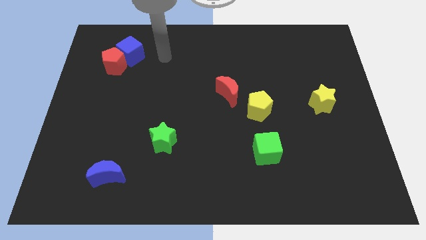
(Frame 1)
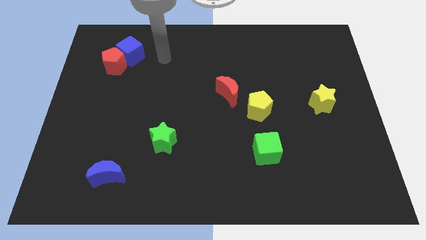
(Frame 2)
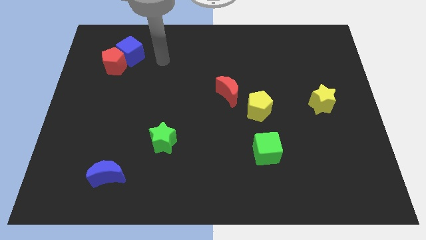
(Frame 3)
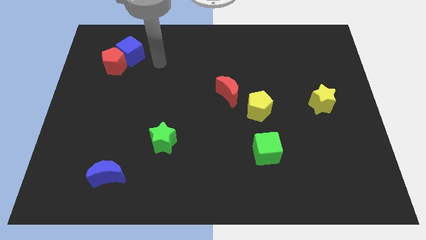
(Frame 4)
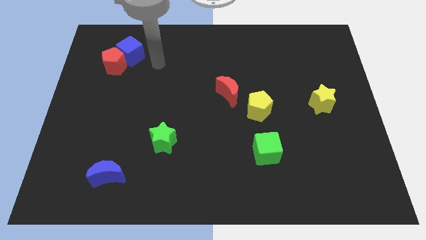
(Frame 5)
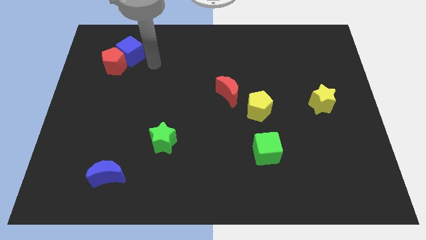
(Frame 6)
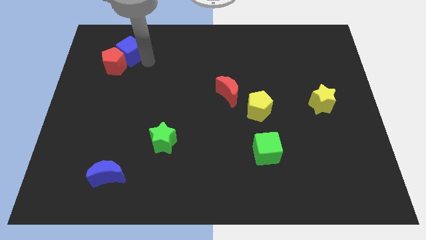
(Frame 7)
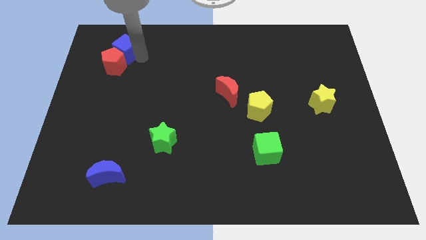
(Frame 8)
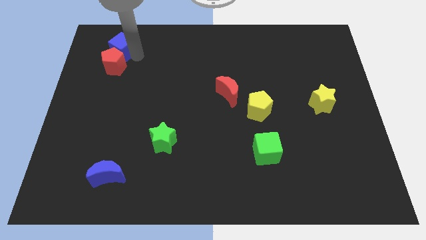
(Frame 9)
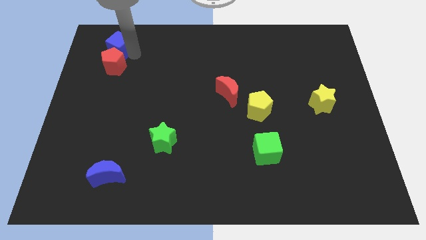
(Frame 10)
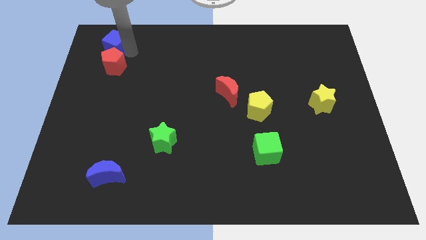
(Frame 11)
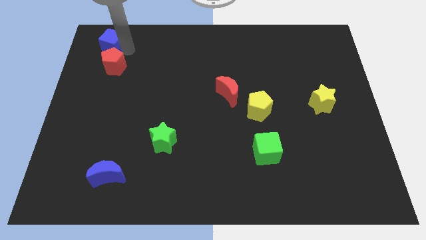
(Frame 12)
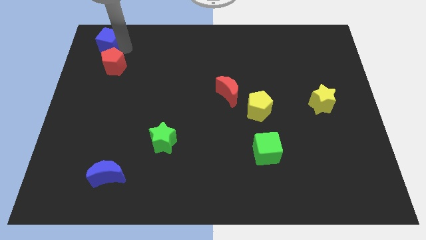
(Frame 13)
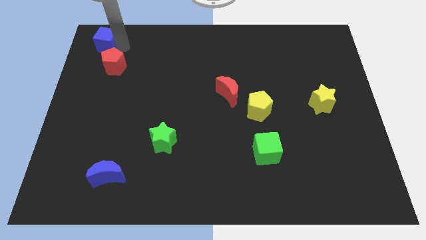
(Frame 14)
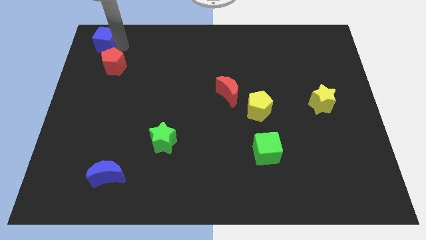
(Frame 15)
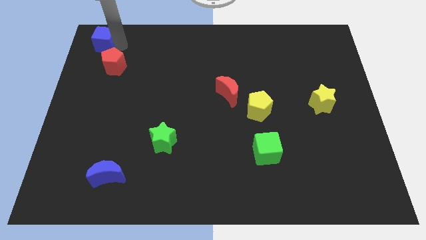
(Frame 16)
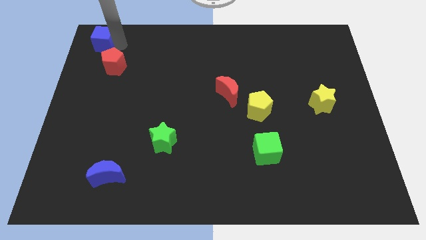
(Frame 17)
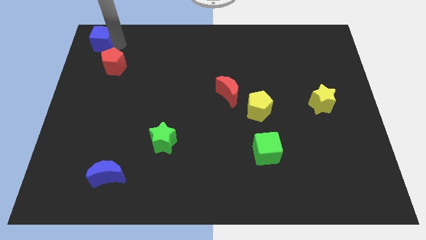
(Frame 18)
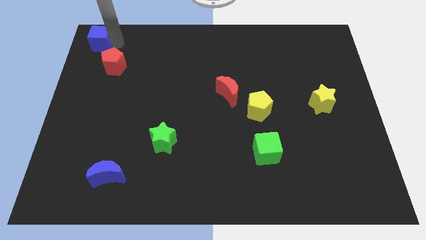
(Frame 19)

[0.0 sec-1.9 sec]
separate the blue cube from the red pentagon

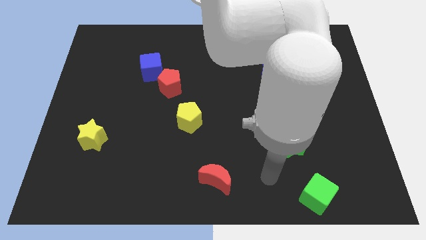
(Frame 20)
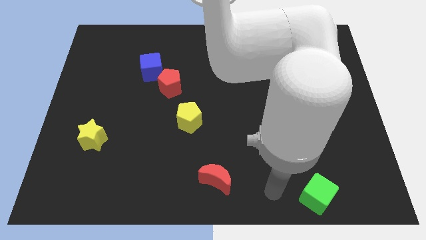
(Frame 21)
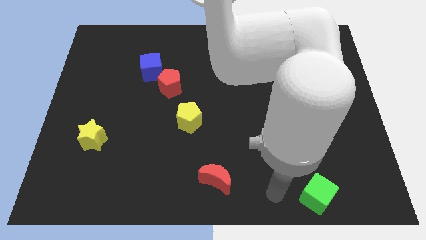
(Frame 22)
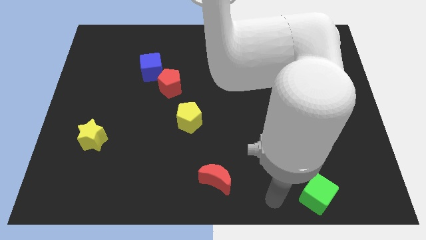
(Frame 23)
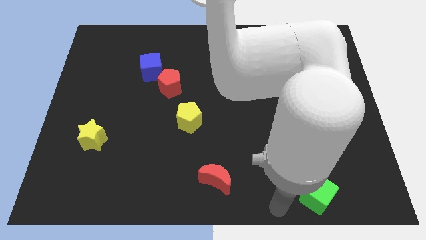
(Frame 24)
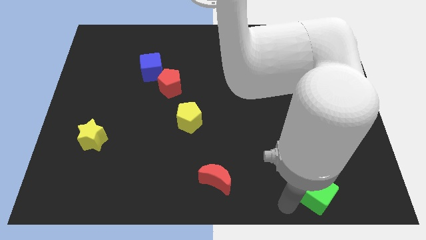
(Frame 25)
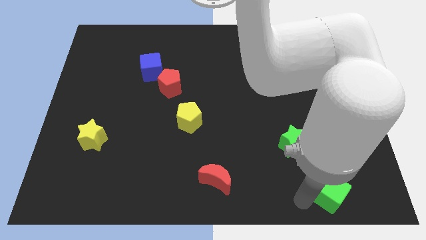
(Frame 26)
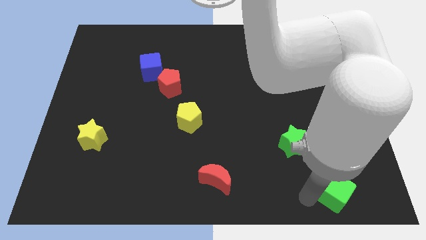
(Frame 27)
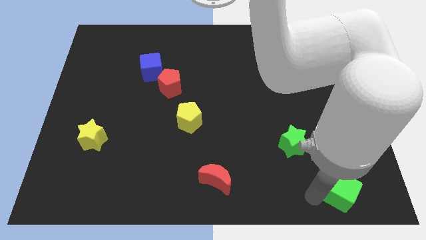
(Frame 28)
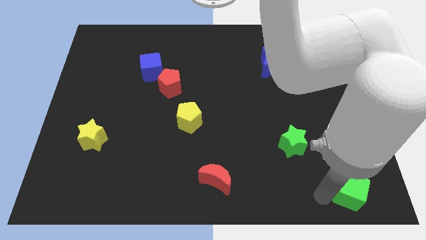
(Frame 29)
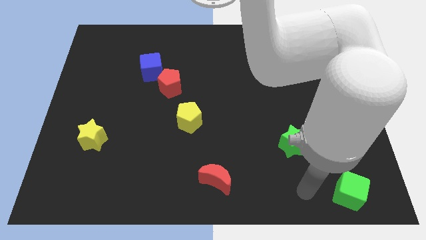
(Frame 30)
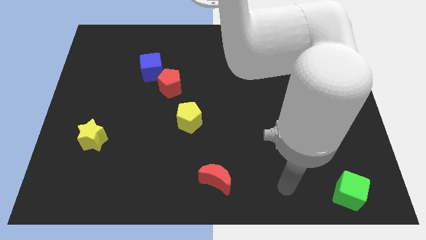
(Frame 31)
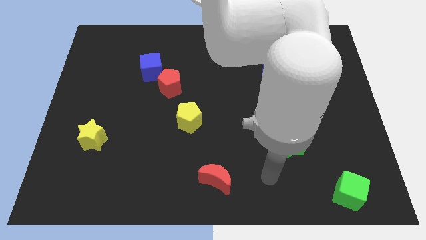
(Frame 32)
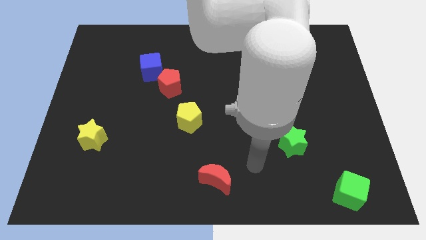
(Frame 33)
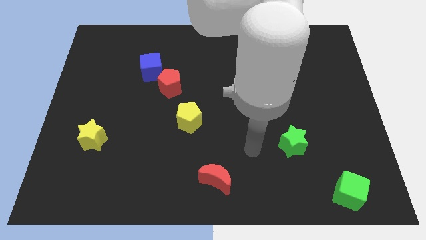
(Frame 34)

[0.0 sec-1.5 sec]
push the green cube towards the bottom right corner of the board

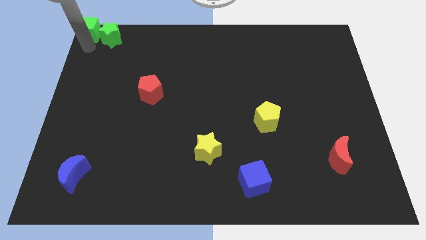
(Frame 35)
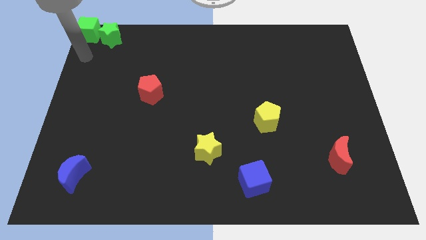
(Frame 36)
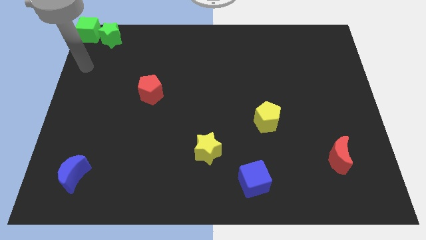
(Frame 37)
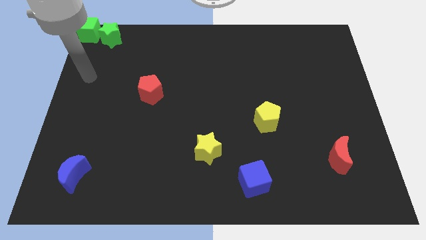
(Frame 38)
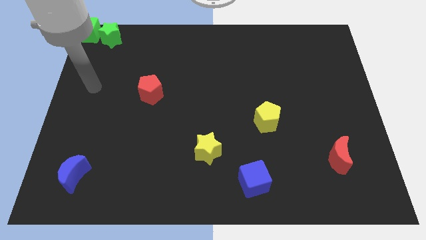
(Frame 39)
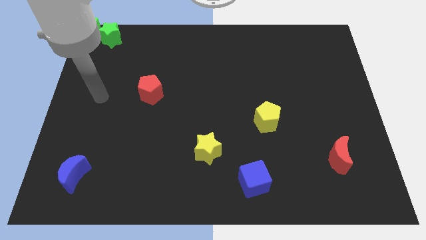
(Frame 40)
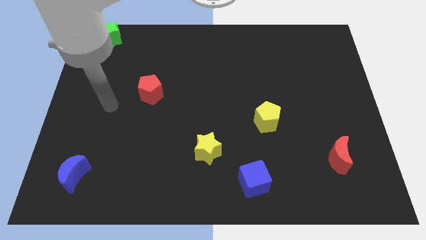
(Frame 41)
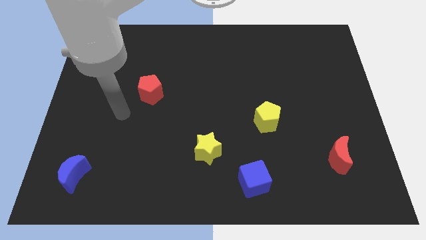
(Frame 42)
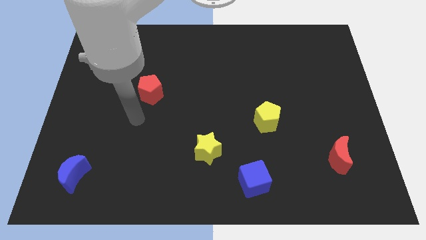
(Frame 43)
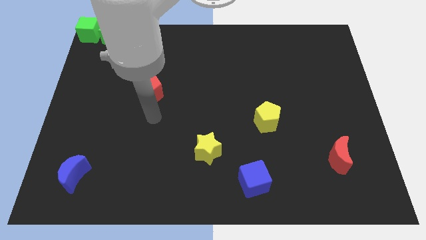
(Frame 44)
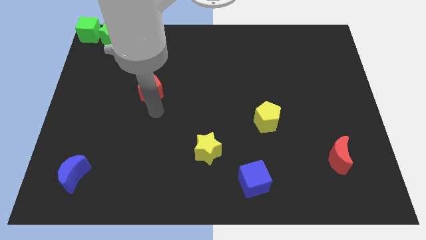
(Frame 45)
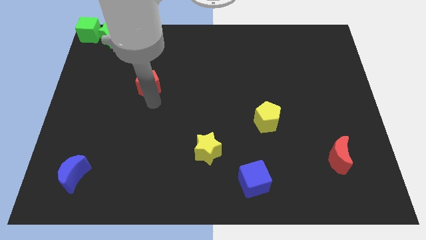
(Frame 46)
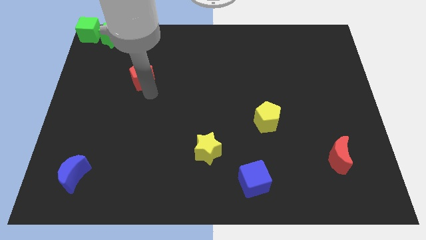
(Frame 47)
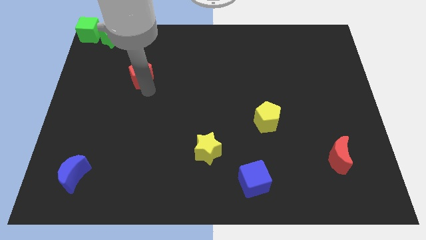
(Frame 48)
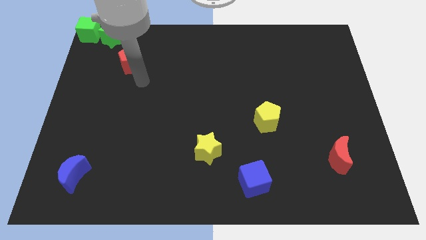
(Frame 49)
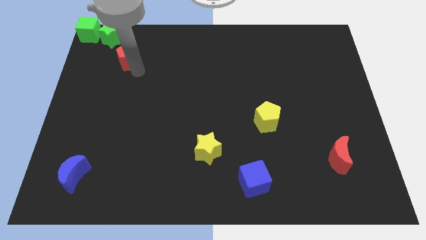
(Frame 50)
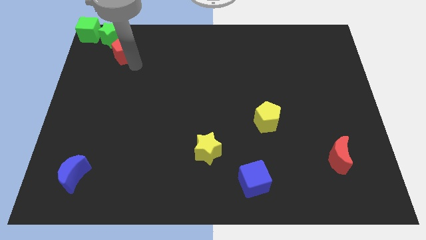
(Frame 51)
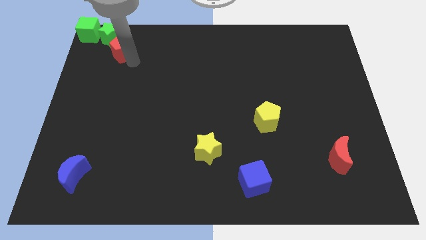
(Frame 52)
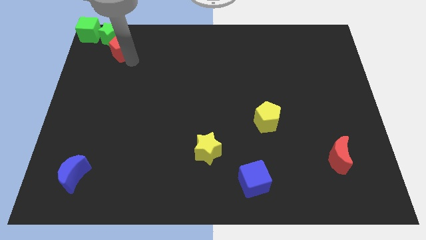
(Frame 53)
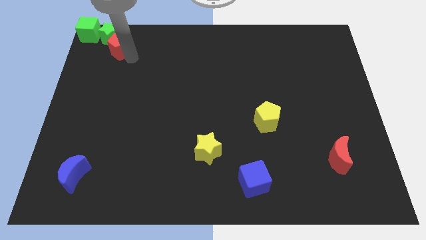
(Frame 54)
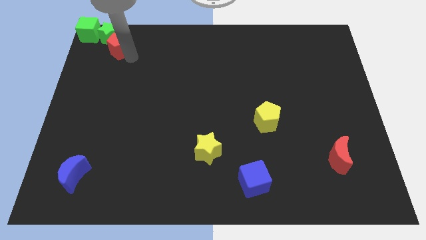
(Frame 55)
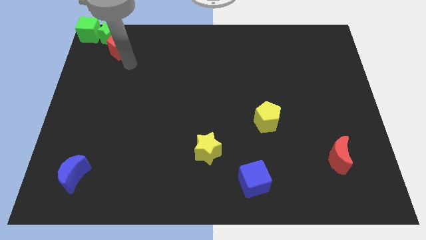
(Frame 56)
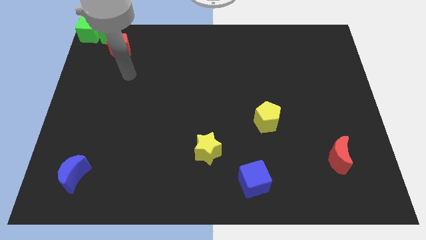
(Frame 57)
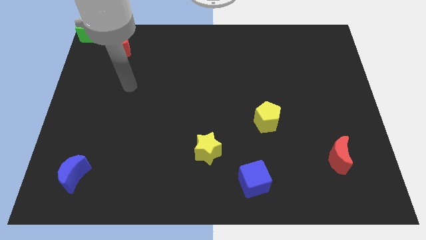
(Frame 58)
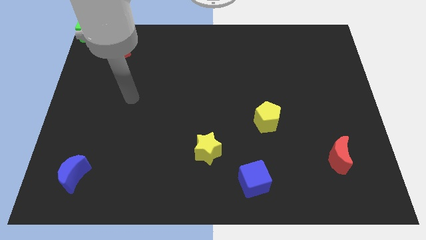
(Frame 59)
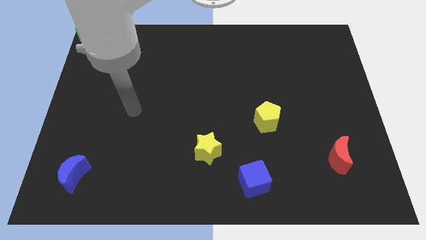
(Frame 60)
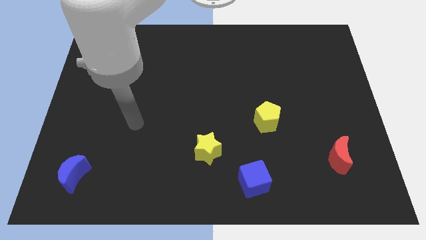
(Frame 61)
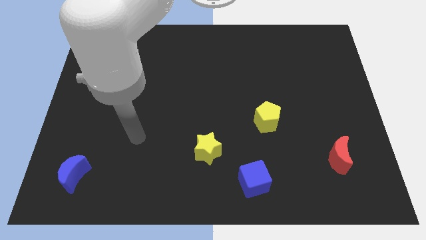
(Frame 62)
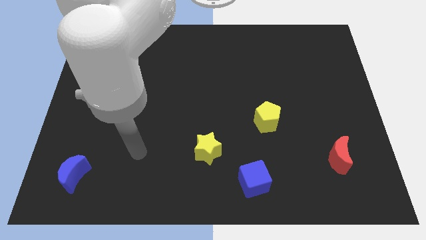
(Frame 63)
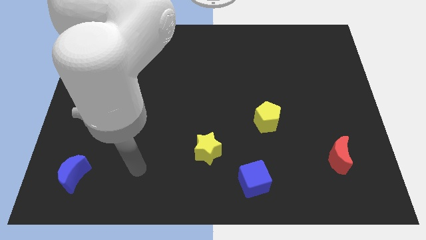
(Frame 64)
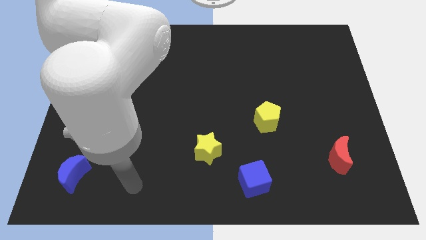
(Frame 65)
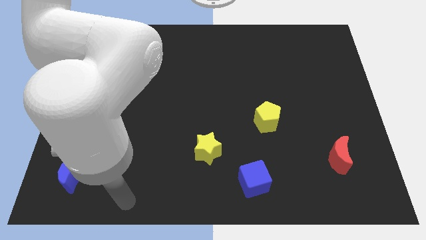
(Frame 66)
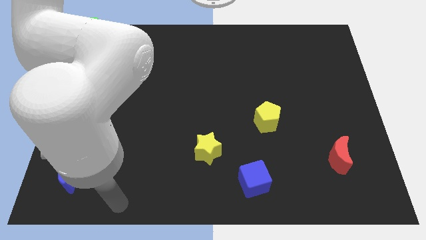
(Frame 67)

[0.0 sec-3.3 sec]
push the red pentagon into the green star

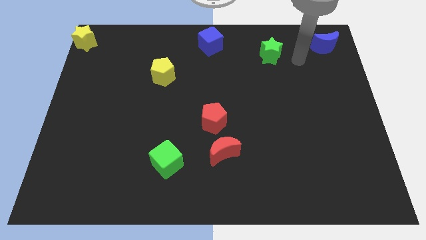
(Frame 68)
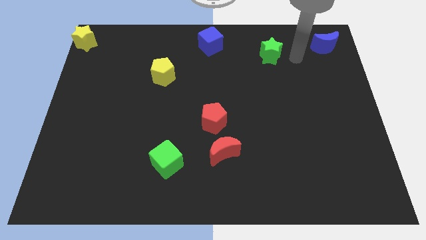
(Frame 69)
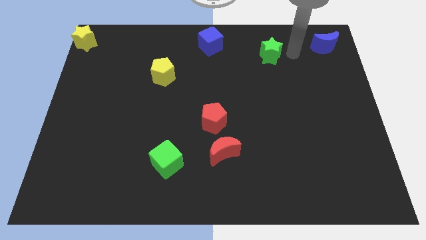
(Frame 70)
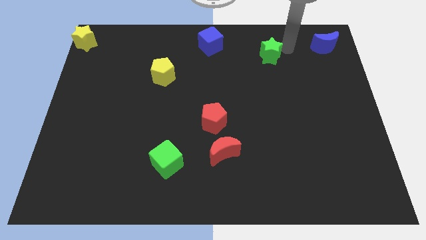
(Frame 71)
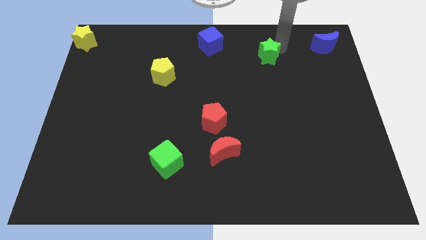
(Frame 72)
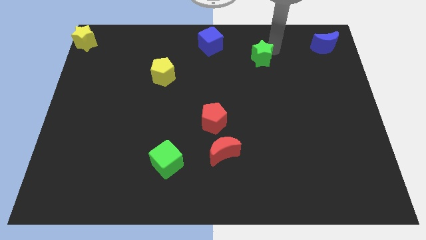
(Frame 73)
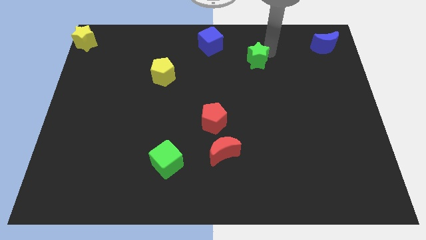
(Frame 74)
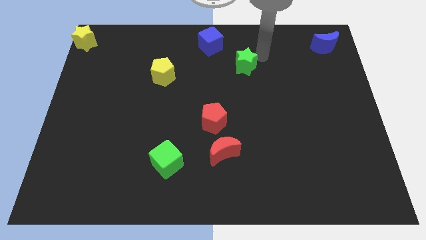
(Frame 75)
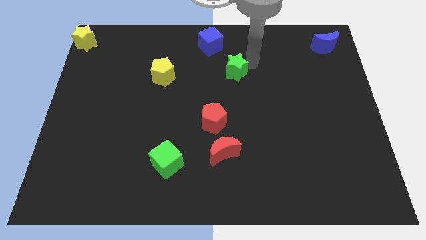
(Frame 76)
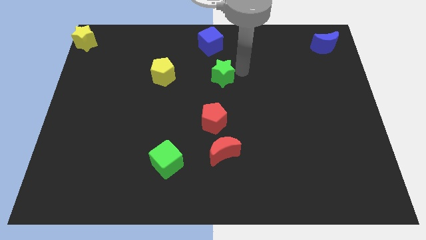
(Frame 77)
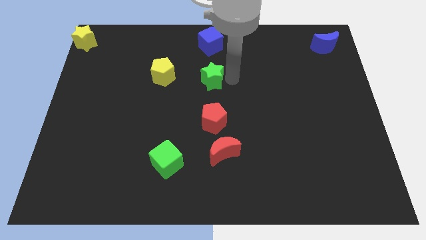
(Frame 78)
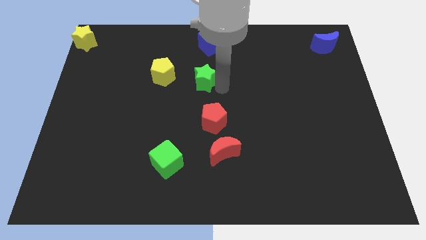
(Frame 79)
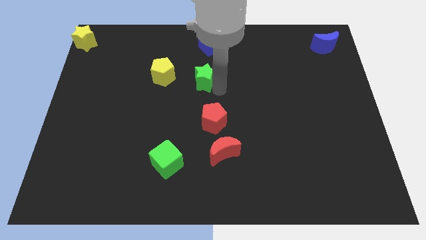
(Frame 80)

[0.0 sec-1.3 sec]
put the green star to the top left side of the red pentagon

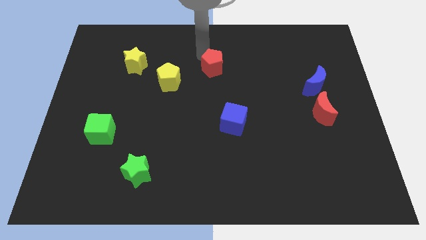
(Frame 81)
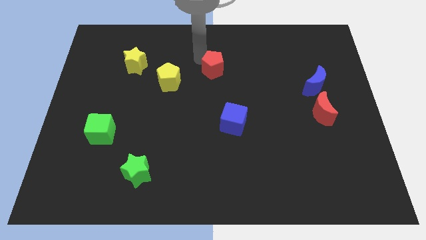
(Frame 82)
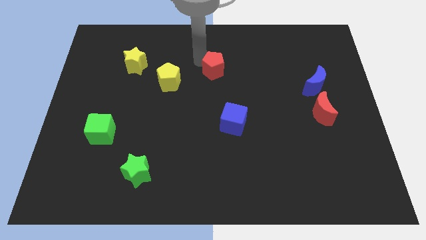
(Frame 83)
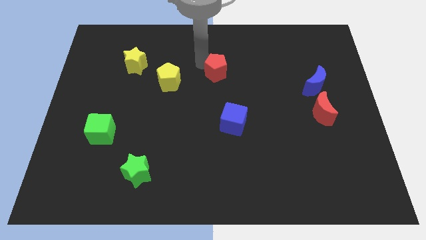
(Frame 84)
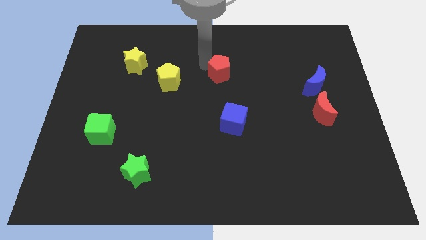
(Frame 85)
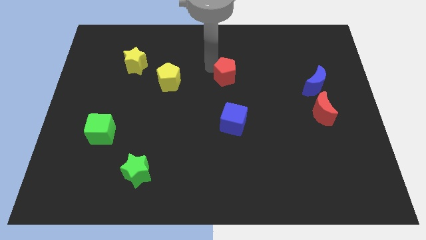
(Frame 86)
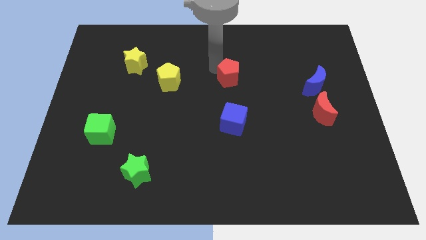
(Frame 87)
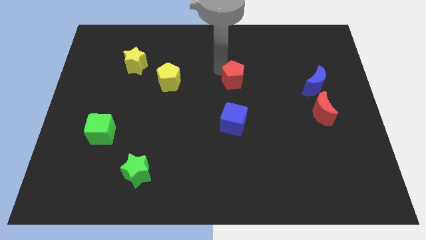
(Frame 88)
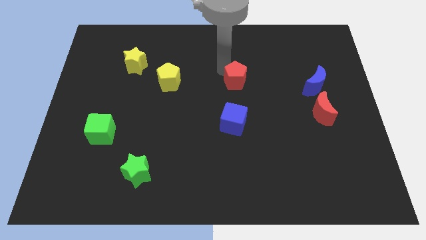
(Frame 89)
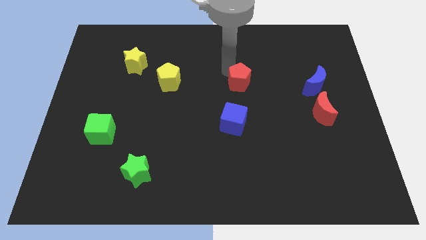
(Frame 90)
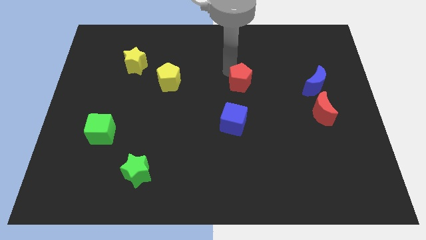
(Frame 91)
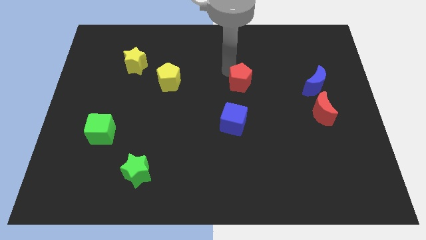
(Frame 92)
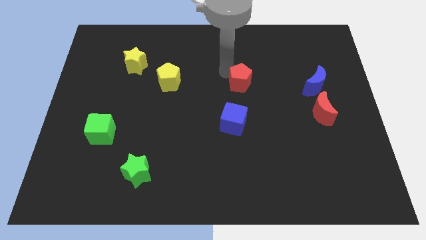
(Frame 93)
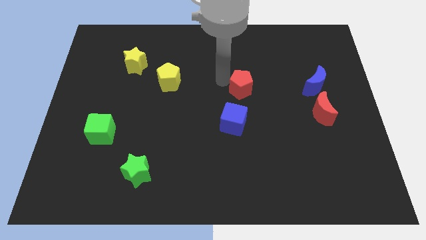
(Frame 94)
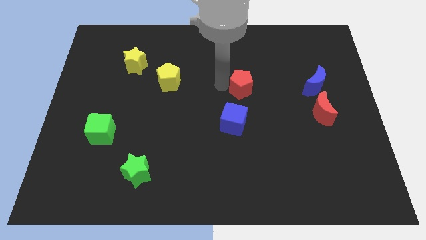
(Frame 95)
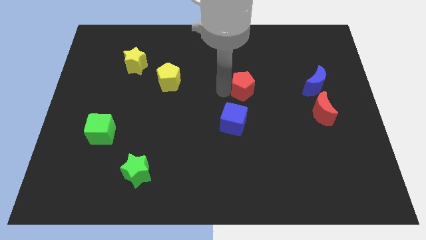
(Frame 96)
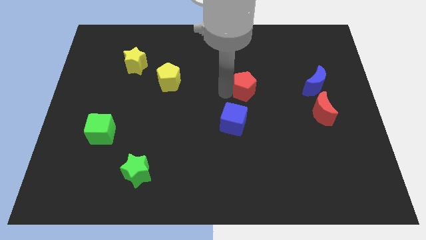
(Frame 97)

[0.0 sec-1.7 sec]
push the red pentagon above the blue cube
